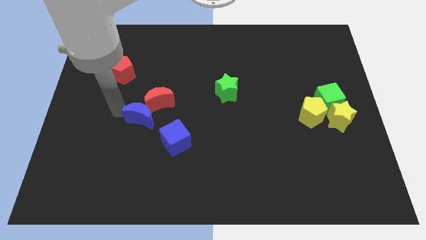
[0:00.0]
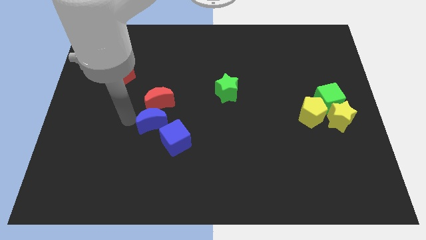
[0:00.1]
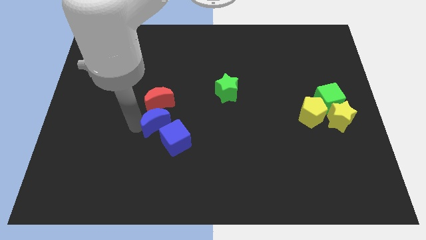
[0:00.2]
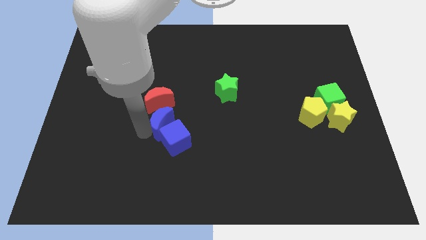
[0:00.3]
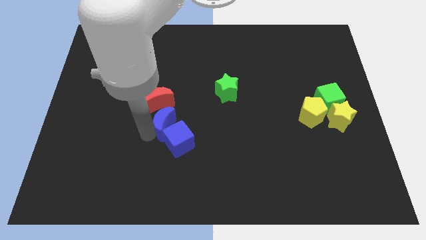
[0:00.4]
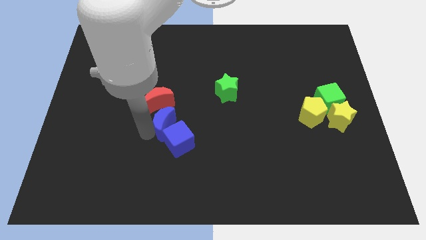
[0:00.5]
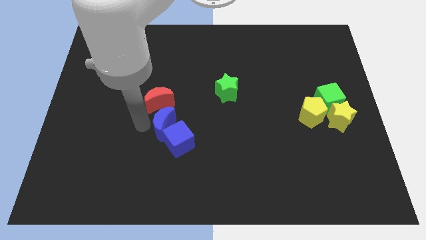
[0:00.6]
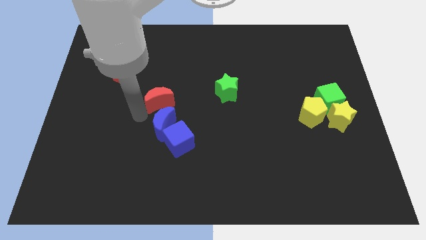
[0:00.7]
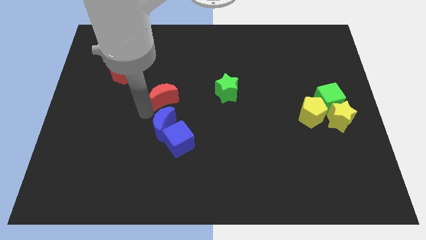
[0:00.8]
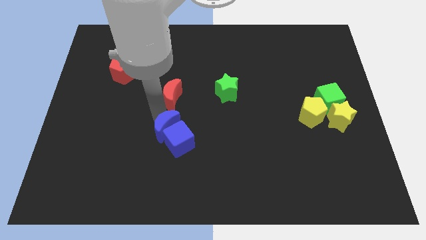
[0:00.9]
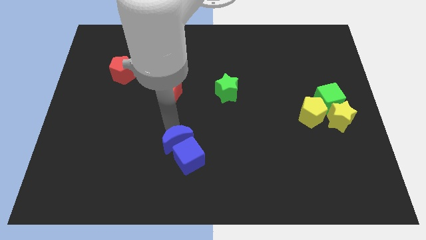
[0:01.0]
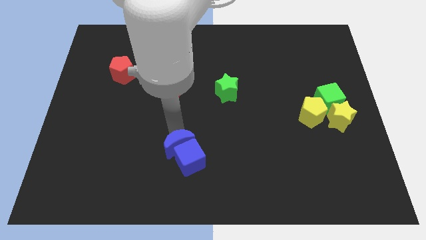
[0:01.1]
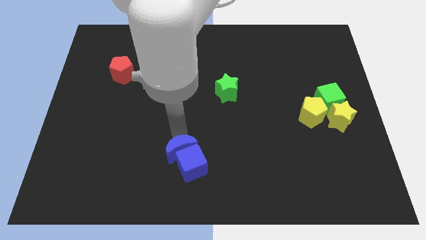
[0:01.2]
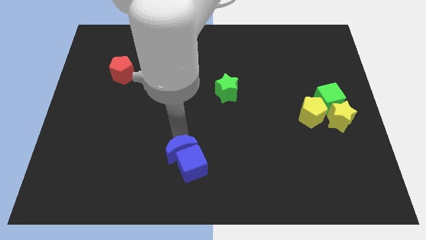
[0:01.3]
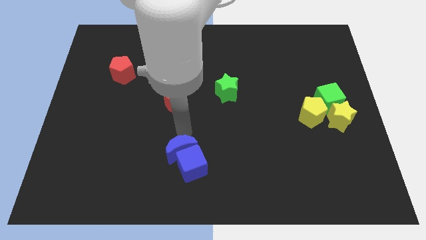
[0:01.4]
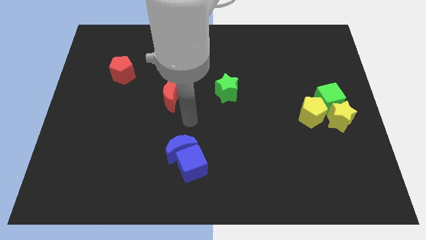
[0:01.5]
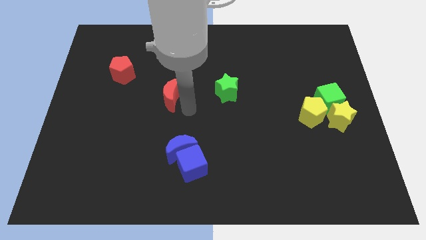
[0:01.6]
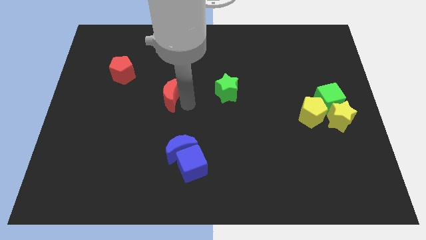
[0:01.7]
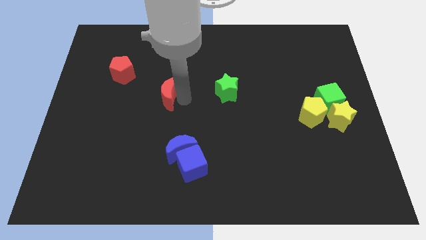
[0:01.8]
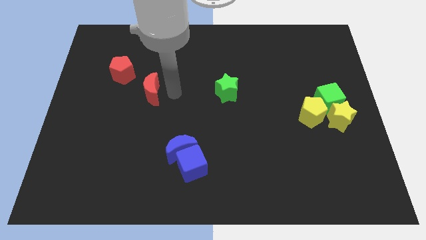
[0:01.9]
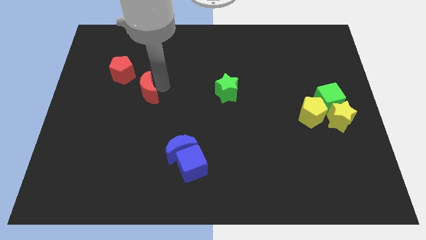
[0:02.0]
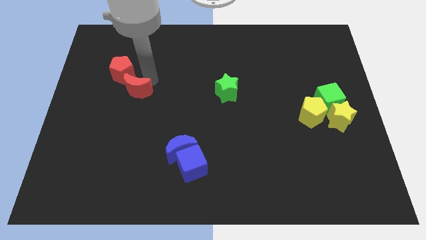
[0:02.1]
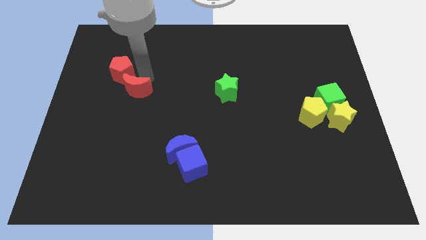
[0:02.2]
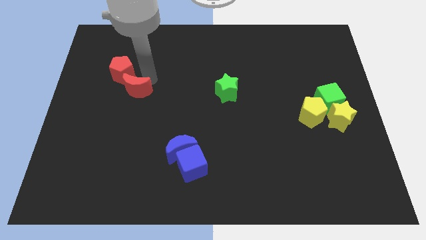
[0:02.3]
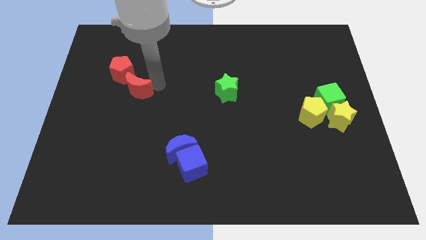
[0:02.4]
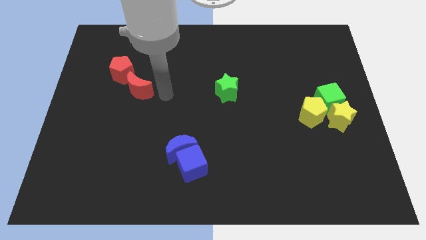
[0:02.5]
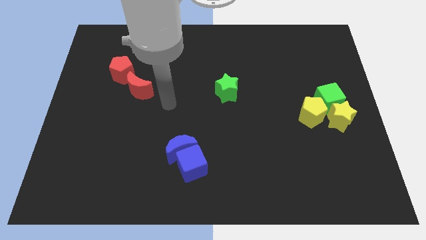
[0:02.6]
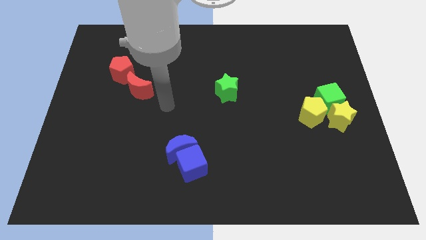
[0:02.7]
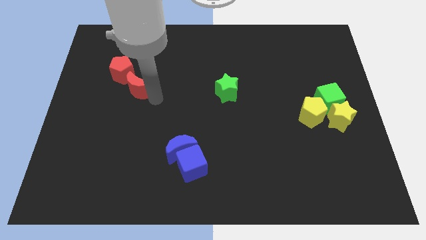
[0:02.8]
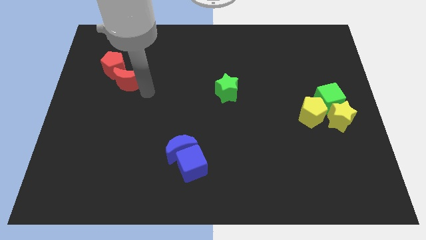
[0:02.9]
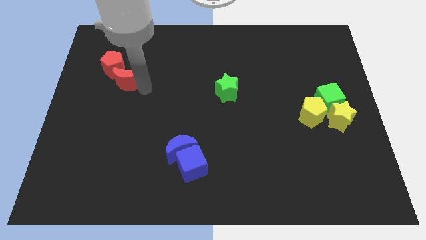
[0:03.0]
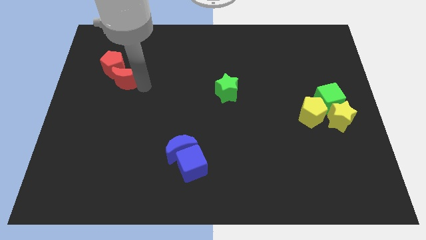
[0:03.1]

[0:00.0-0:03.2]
push the red moon into a red pentagon

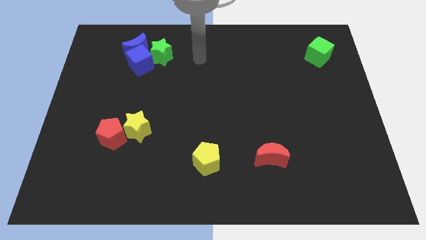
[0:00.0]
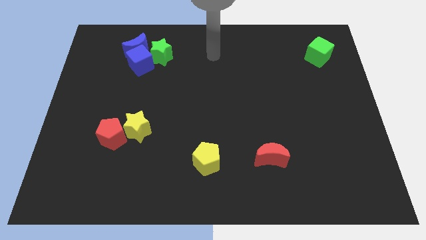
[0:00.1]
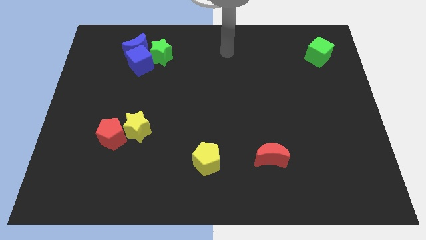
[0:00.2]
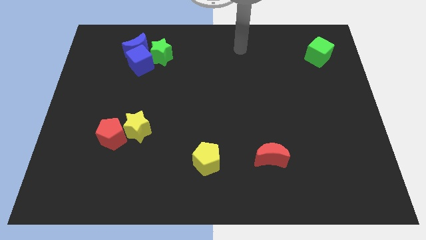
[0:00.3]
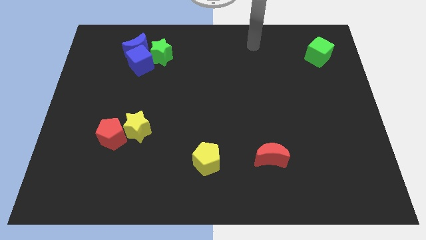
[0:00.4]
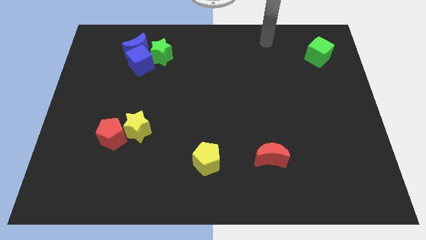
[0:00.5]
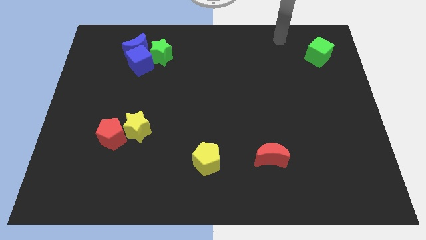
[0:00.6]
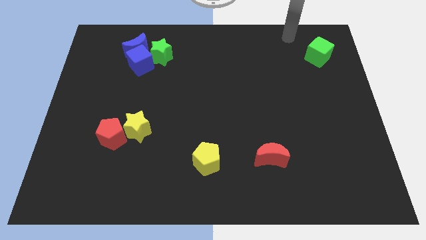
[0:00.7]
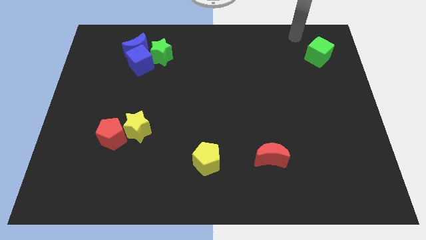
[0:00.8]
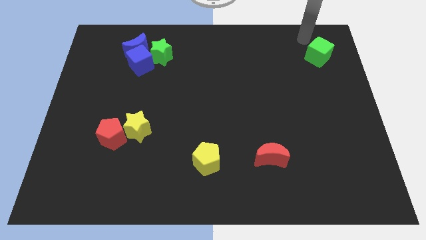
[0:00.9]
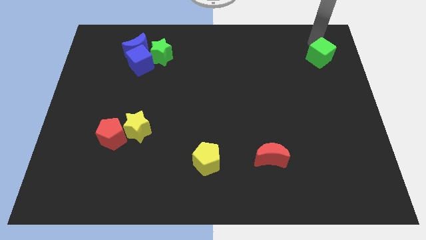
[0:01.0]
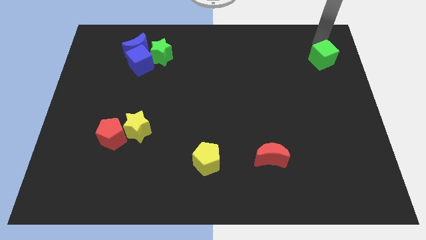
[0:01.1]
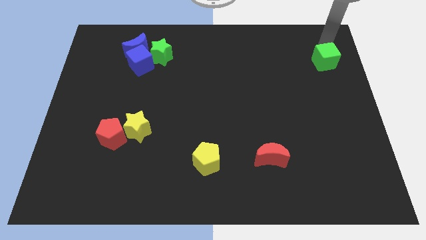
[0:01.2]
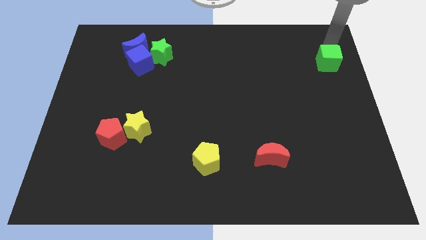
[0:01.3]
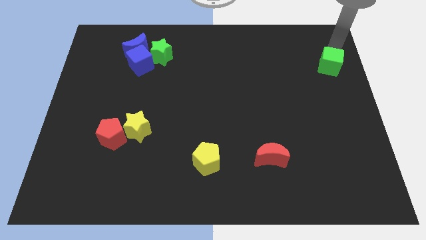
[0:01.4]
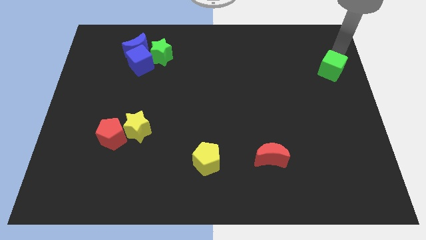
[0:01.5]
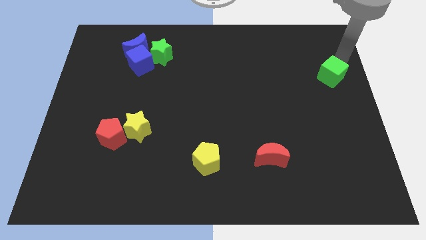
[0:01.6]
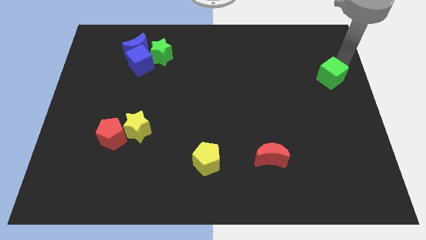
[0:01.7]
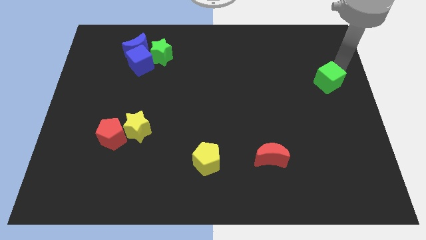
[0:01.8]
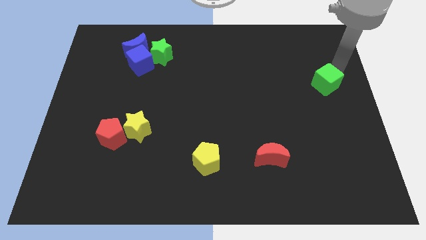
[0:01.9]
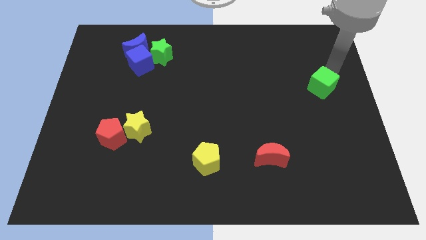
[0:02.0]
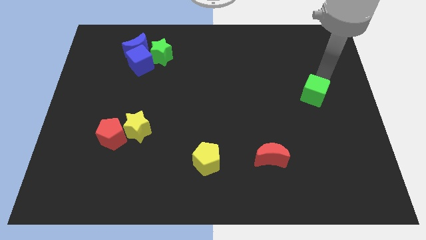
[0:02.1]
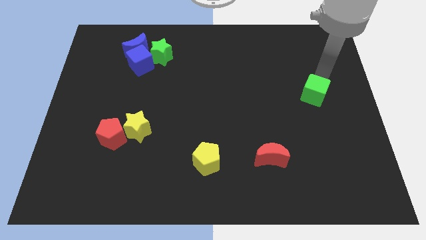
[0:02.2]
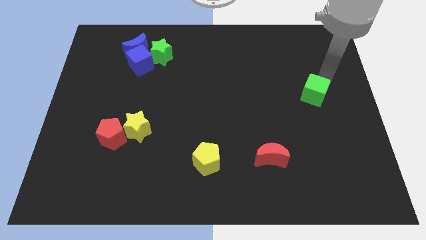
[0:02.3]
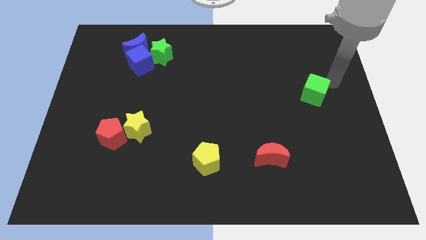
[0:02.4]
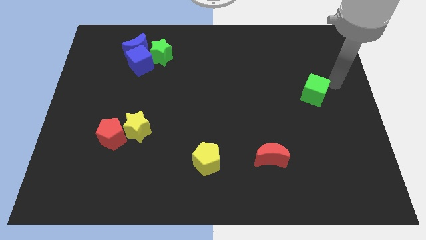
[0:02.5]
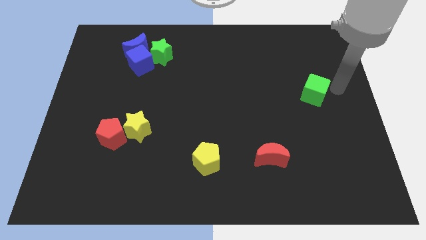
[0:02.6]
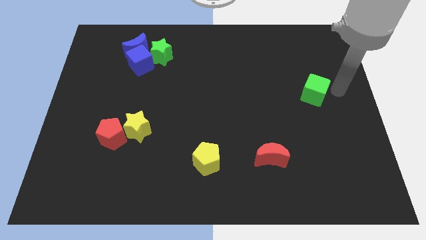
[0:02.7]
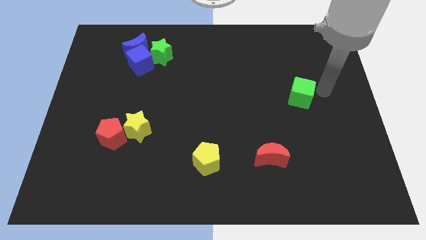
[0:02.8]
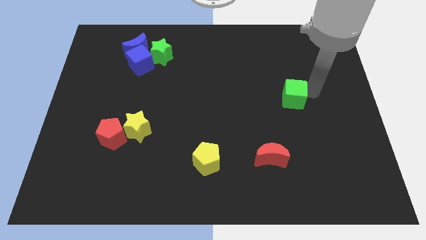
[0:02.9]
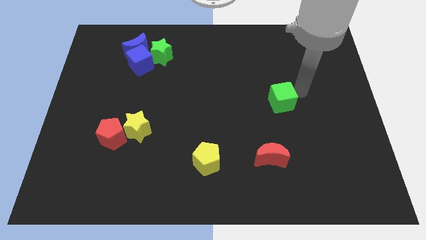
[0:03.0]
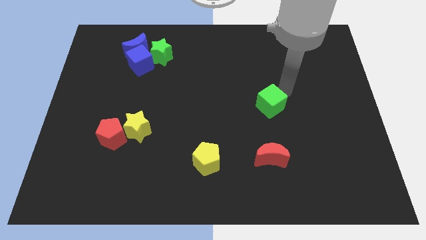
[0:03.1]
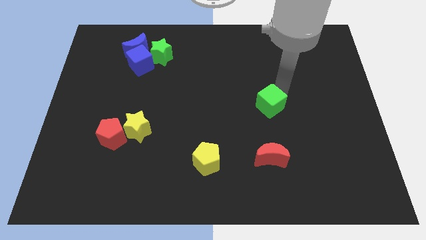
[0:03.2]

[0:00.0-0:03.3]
place the green cube vertically above the red moon

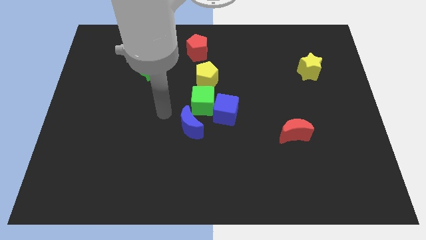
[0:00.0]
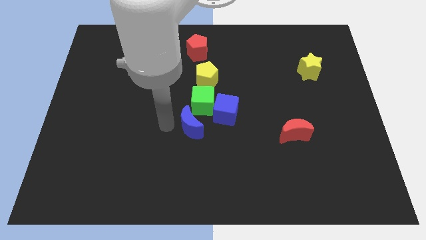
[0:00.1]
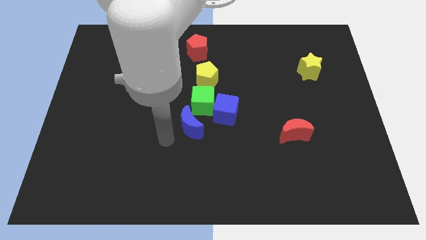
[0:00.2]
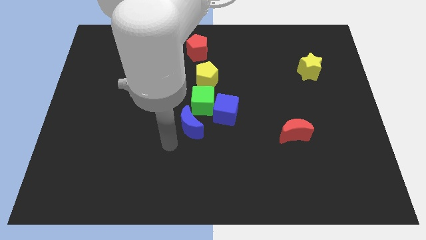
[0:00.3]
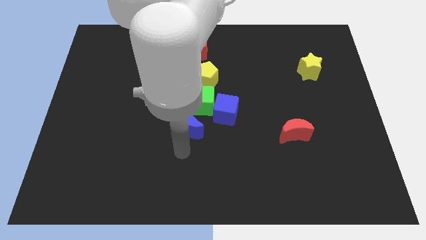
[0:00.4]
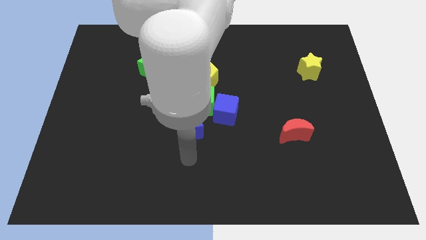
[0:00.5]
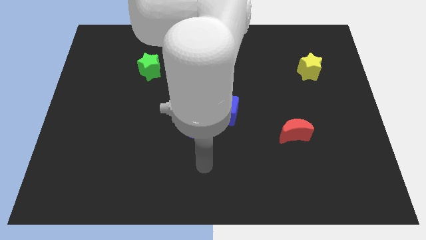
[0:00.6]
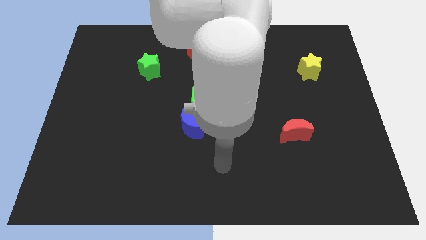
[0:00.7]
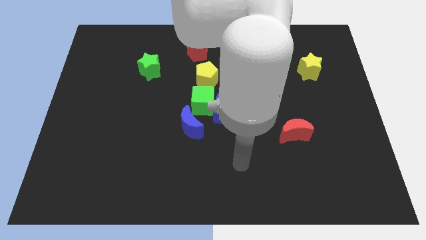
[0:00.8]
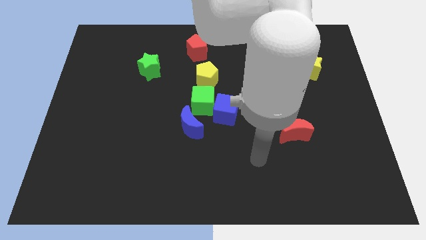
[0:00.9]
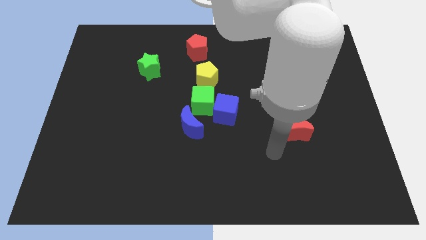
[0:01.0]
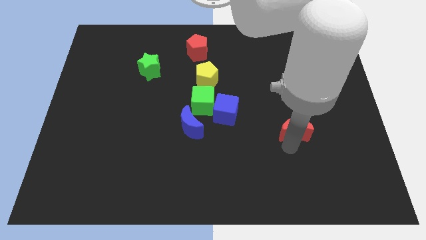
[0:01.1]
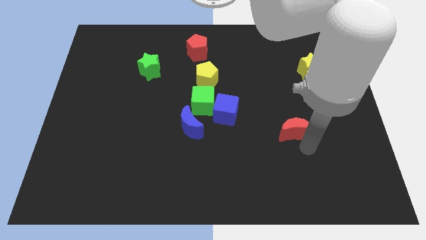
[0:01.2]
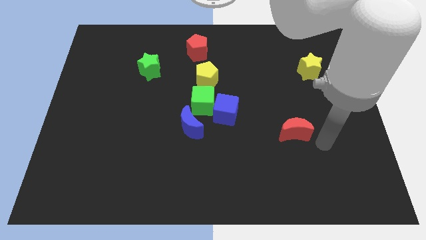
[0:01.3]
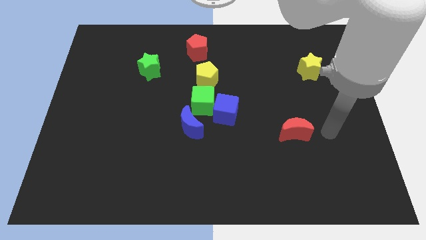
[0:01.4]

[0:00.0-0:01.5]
place your arm to the right of red moon

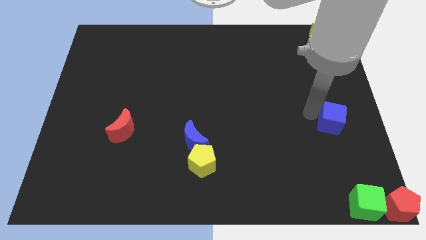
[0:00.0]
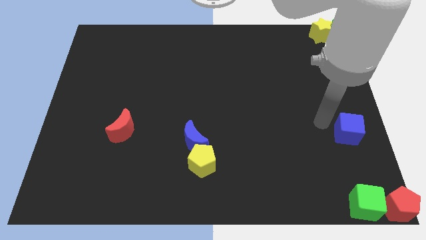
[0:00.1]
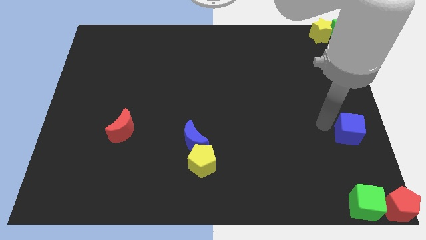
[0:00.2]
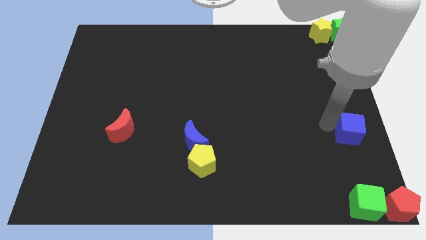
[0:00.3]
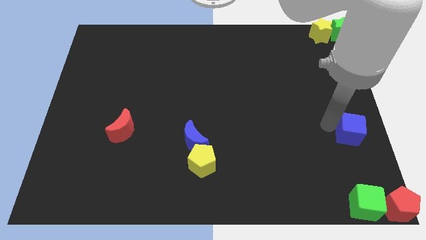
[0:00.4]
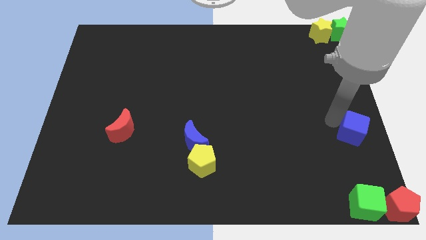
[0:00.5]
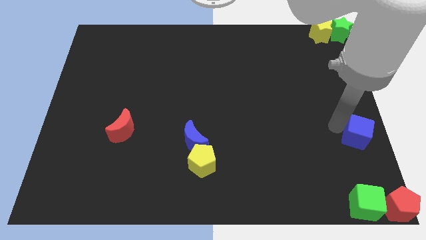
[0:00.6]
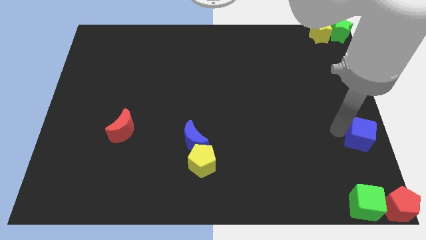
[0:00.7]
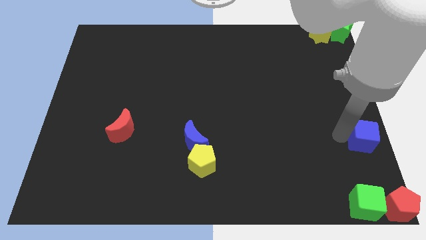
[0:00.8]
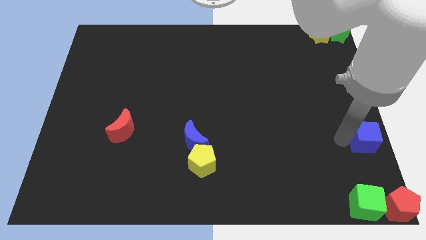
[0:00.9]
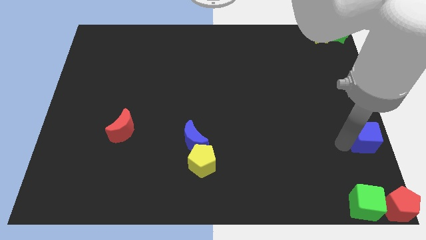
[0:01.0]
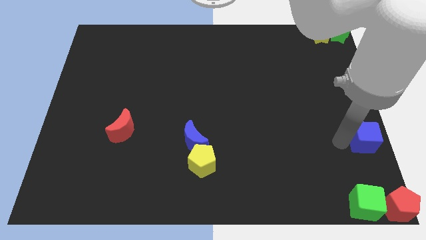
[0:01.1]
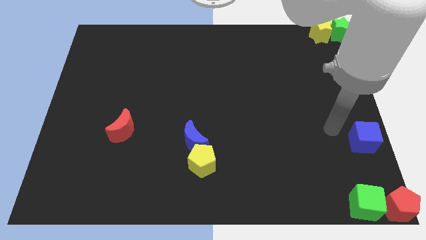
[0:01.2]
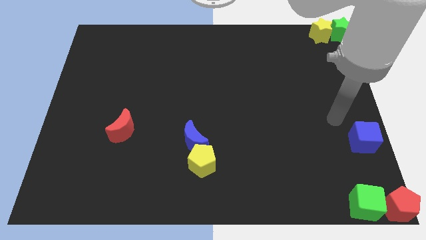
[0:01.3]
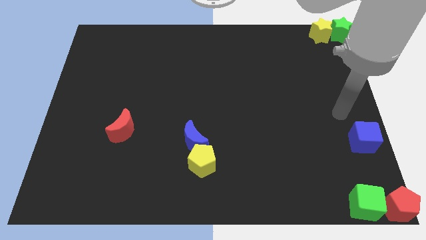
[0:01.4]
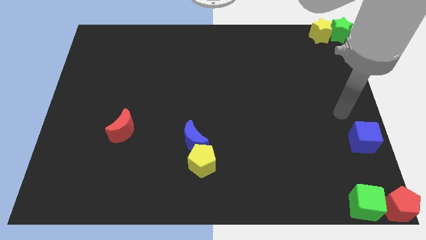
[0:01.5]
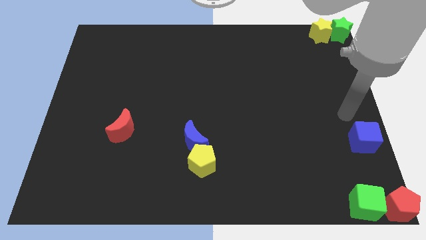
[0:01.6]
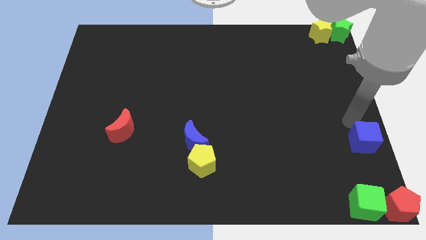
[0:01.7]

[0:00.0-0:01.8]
push the blue square to the right center of the board
